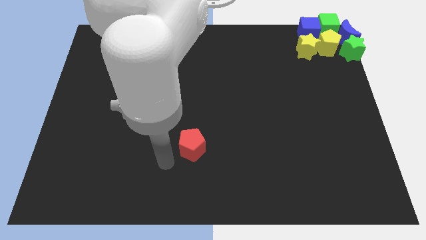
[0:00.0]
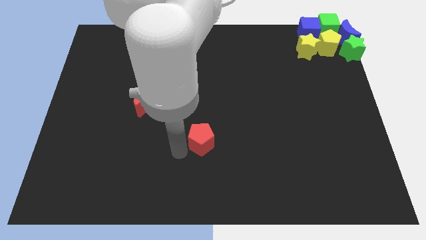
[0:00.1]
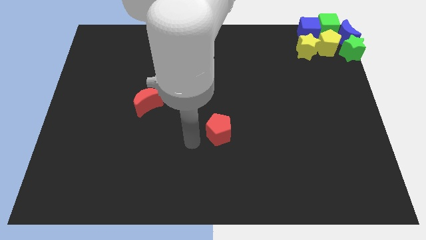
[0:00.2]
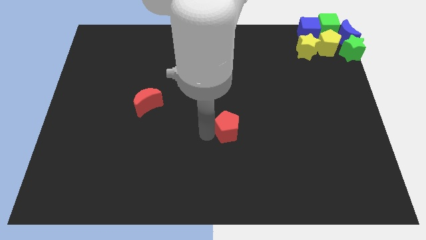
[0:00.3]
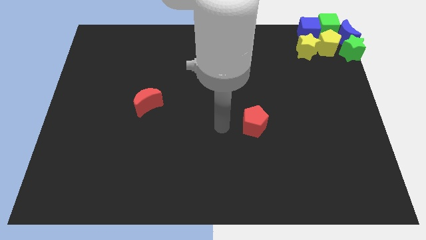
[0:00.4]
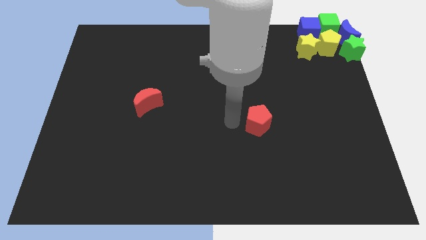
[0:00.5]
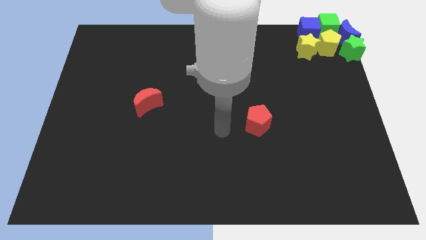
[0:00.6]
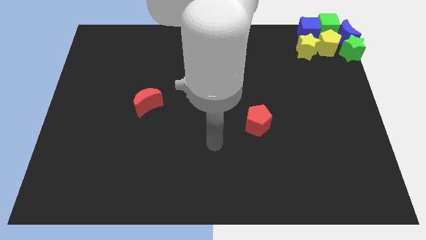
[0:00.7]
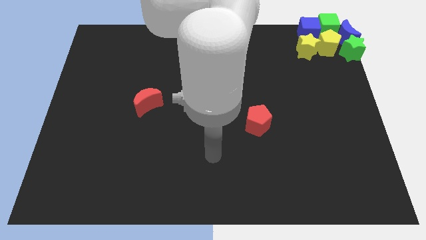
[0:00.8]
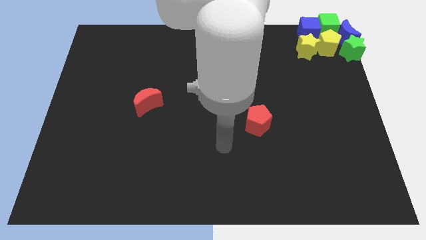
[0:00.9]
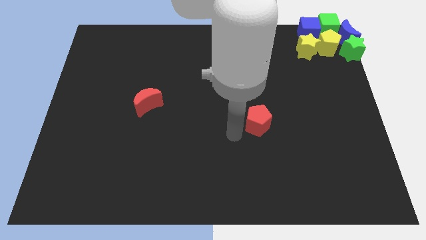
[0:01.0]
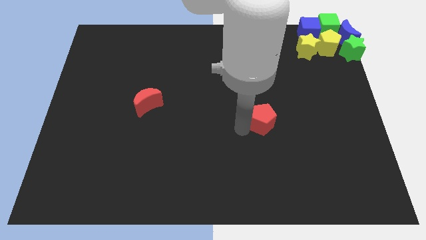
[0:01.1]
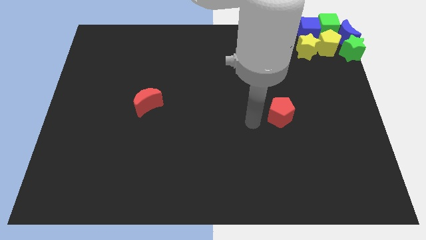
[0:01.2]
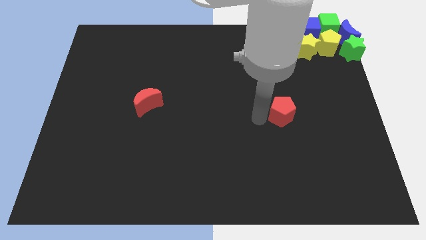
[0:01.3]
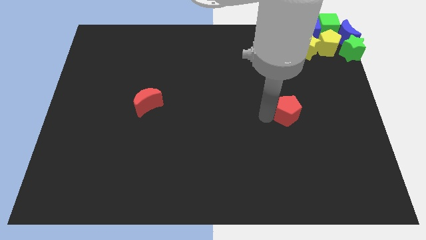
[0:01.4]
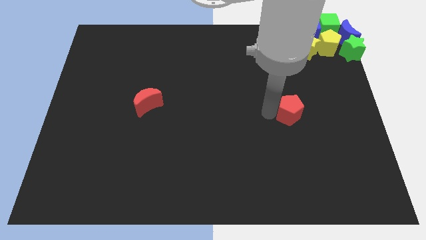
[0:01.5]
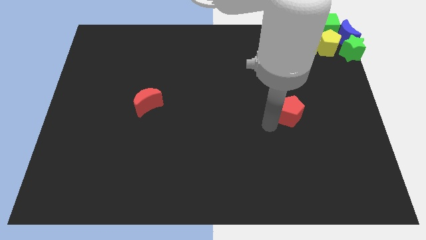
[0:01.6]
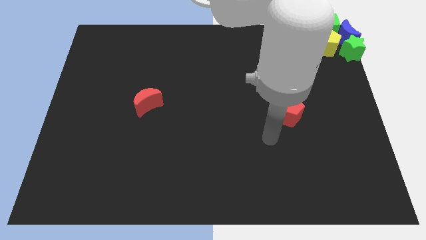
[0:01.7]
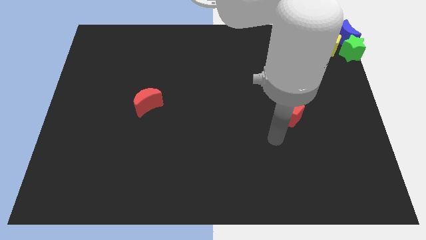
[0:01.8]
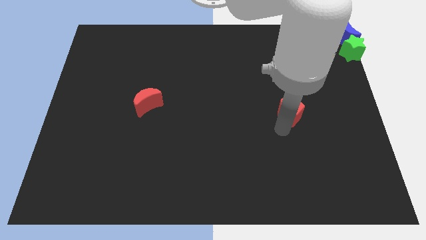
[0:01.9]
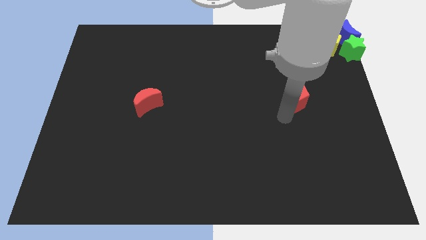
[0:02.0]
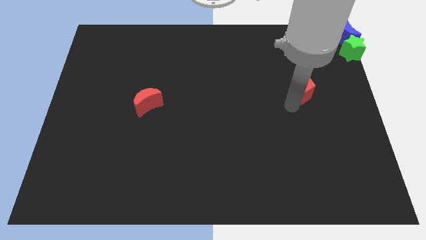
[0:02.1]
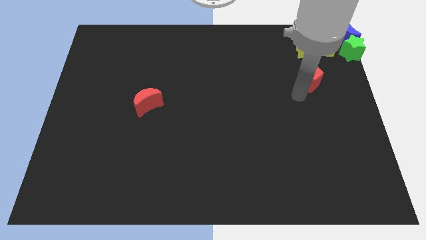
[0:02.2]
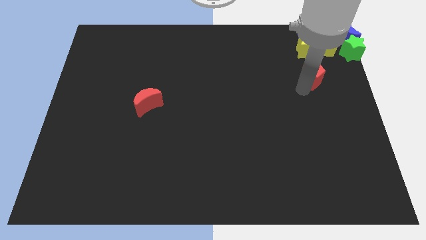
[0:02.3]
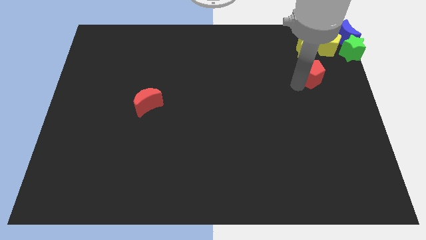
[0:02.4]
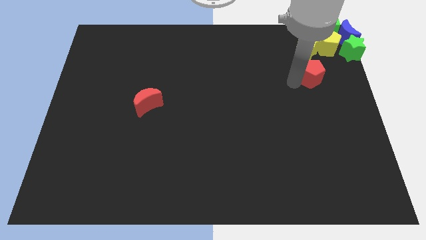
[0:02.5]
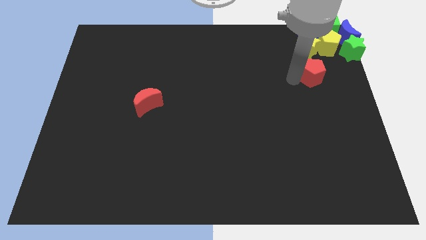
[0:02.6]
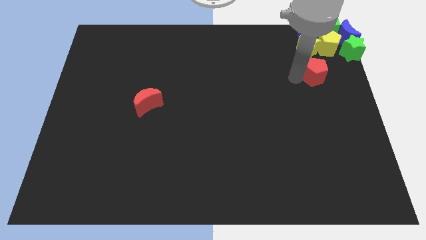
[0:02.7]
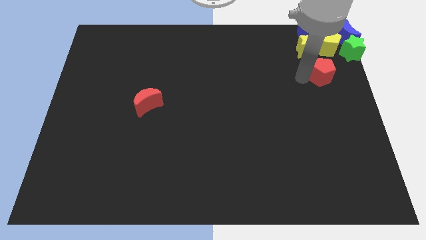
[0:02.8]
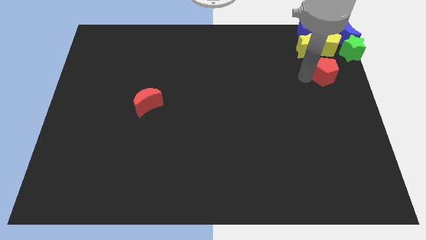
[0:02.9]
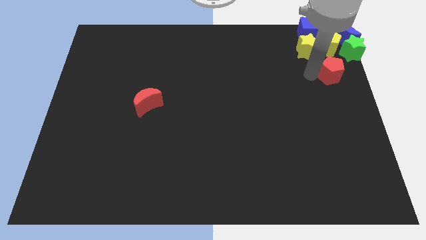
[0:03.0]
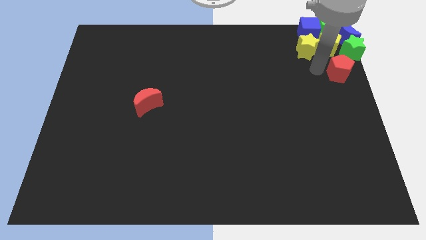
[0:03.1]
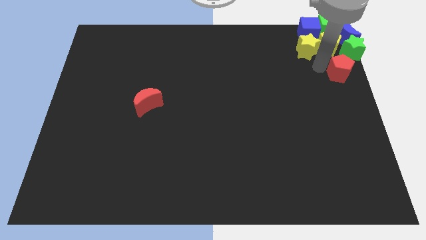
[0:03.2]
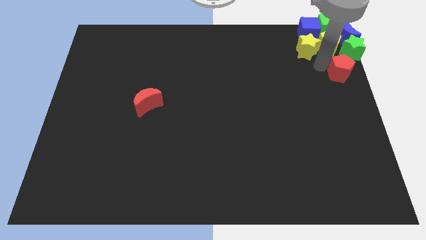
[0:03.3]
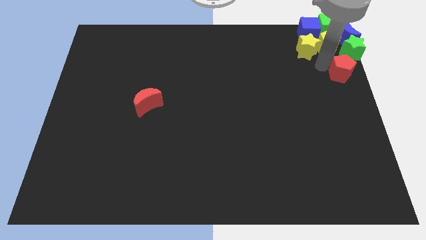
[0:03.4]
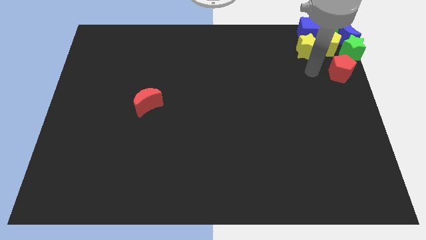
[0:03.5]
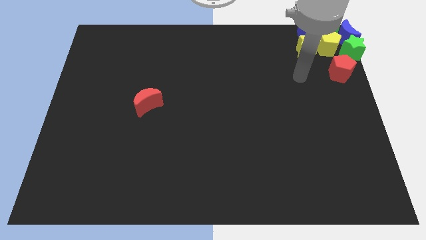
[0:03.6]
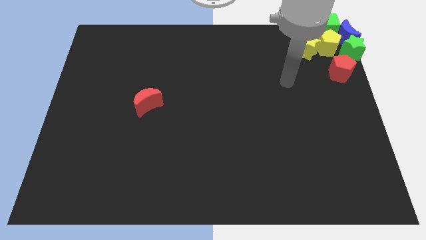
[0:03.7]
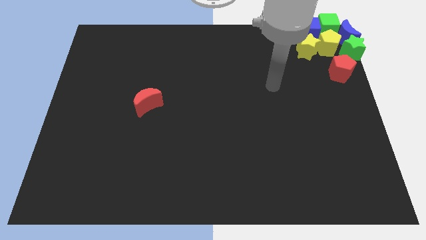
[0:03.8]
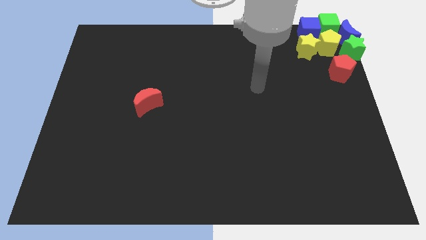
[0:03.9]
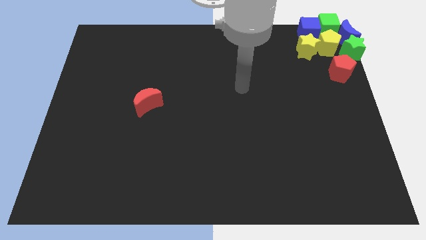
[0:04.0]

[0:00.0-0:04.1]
put the red pentagon diagonally on the bottom left side of the green star

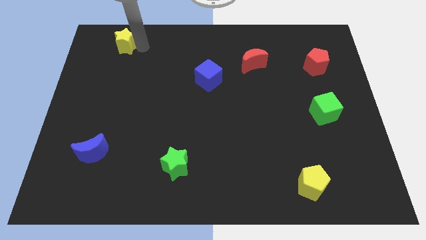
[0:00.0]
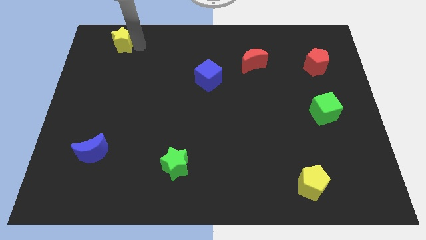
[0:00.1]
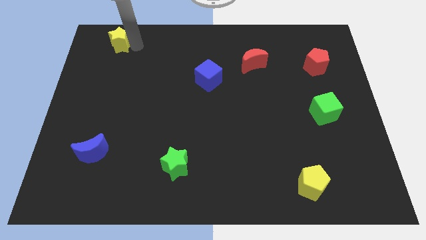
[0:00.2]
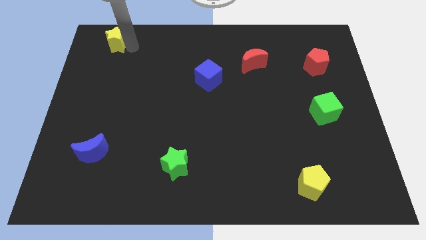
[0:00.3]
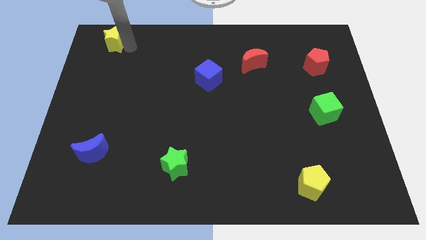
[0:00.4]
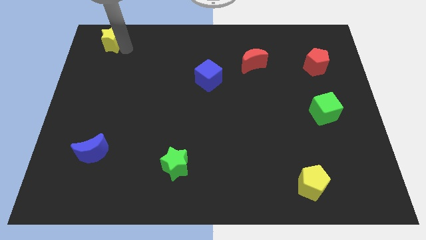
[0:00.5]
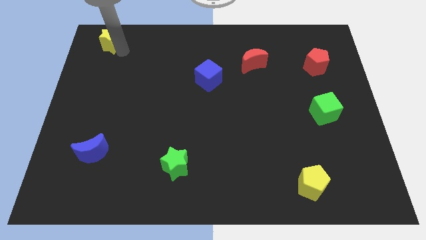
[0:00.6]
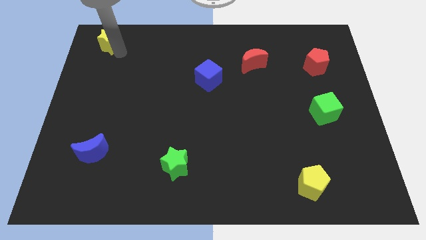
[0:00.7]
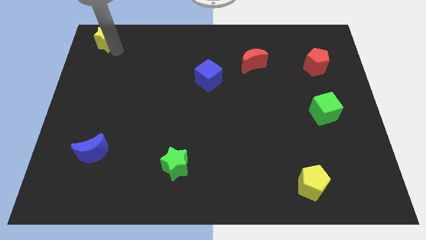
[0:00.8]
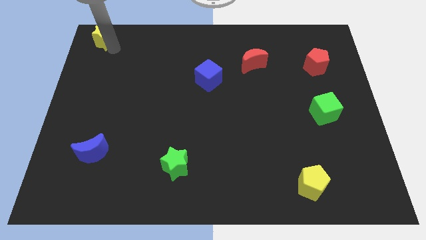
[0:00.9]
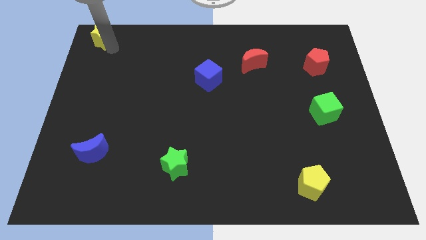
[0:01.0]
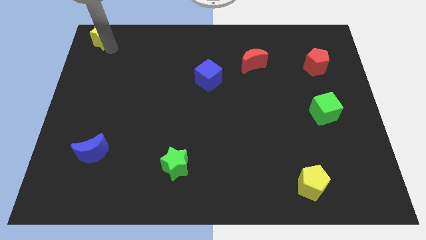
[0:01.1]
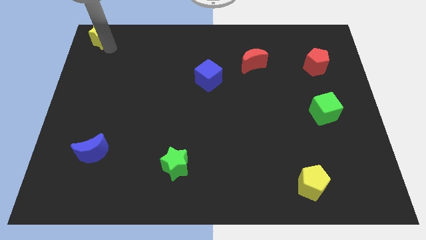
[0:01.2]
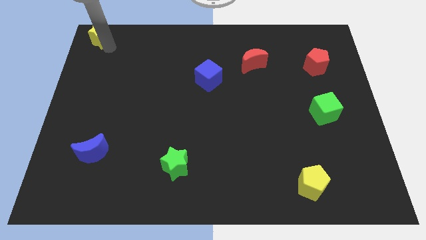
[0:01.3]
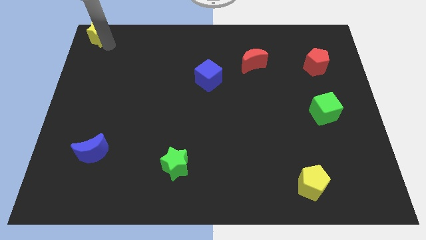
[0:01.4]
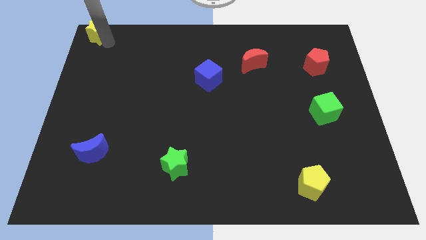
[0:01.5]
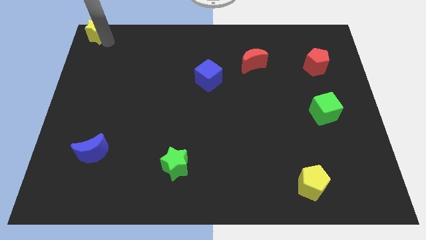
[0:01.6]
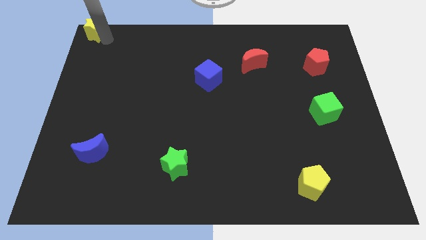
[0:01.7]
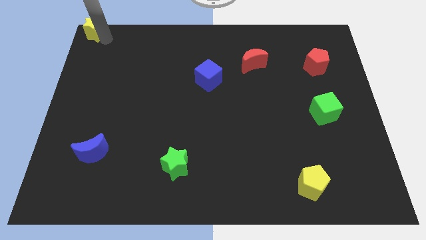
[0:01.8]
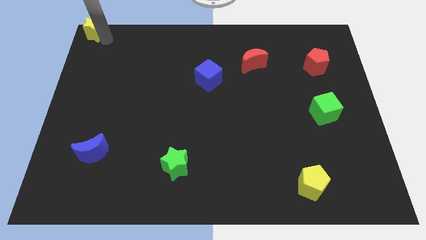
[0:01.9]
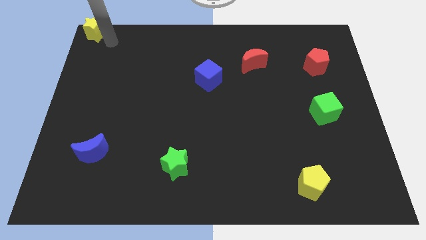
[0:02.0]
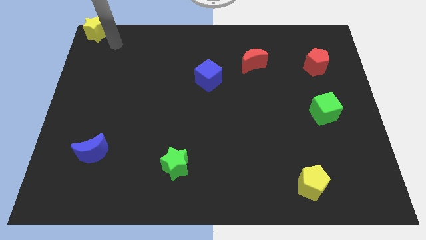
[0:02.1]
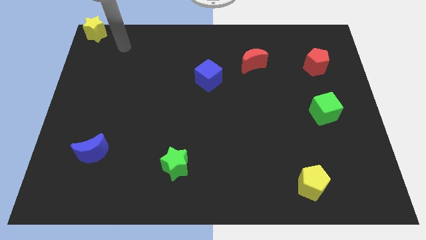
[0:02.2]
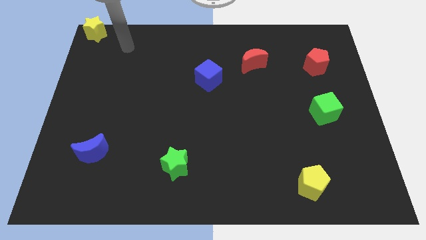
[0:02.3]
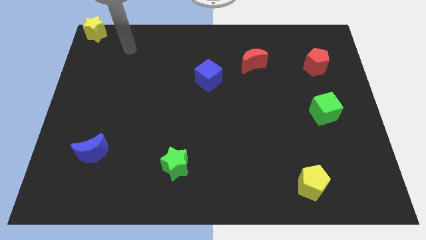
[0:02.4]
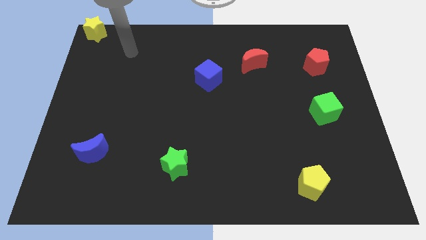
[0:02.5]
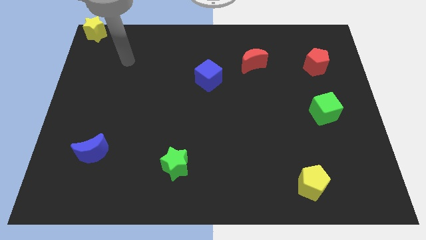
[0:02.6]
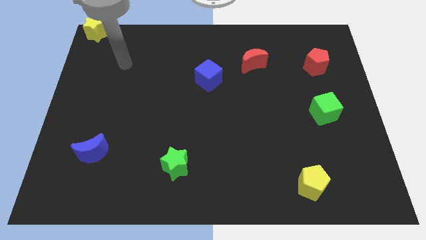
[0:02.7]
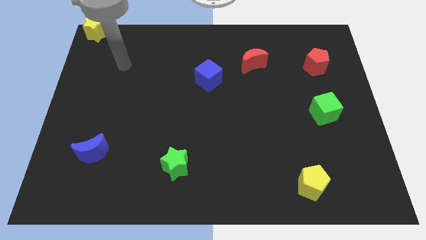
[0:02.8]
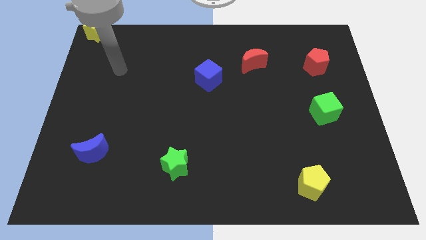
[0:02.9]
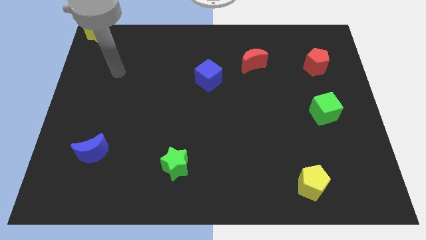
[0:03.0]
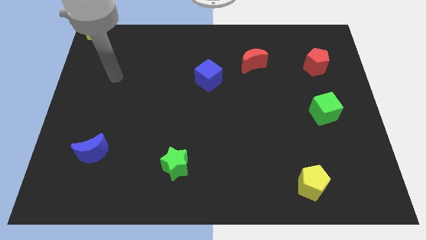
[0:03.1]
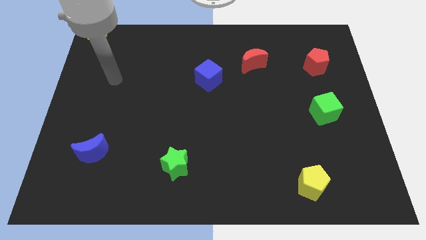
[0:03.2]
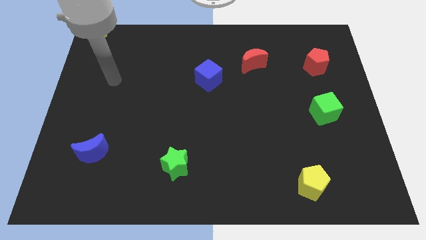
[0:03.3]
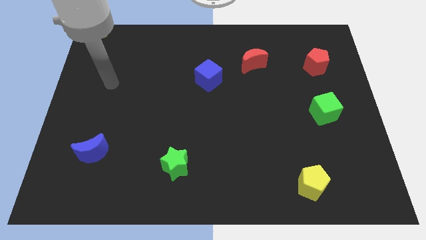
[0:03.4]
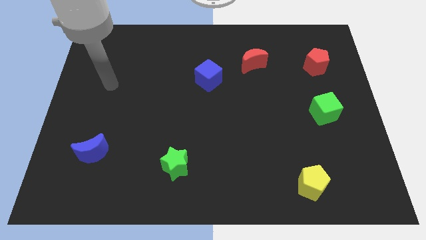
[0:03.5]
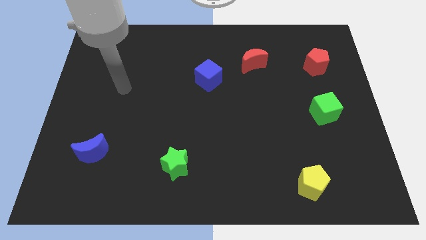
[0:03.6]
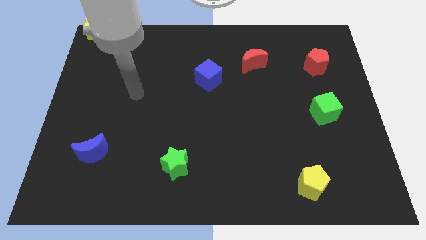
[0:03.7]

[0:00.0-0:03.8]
place the yellow star to the top left corner of the board

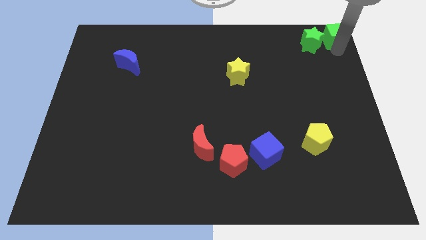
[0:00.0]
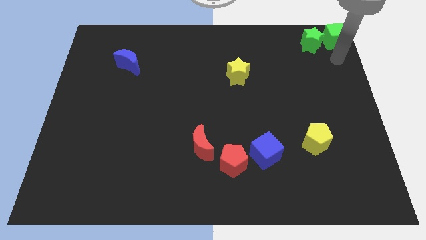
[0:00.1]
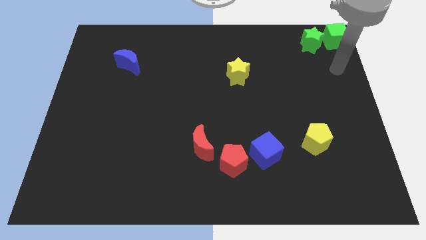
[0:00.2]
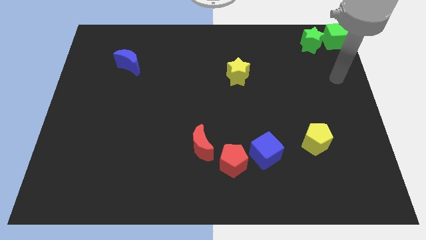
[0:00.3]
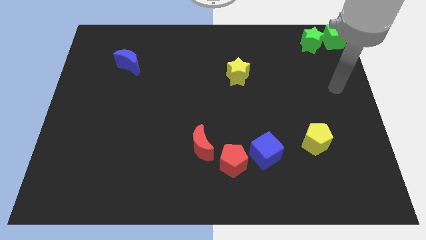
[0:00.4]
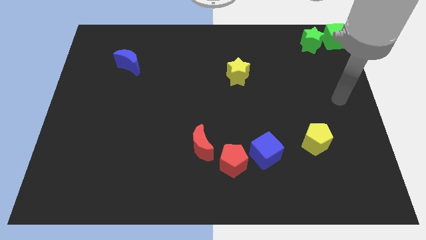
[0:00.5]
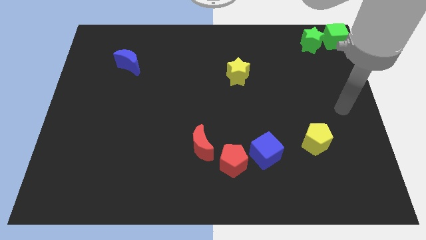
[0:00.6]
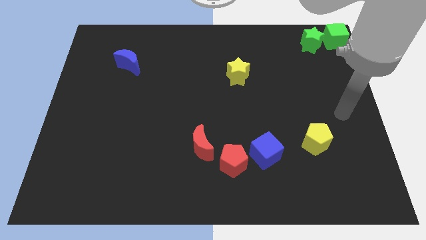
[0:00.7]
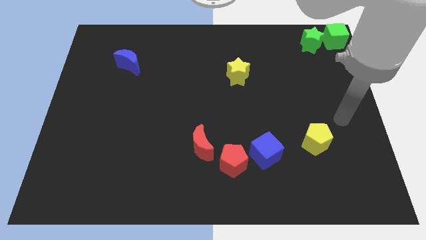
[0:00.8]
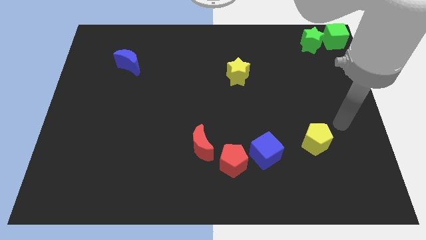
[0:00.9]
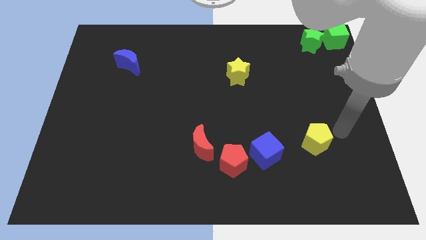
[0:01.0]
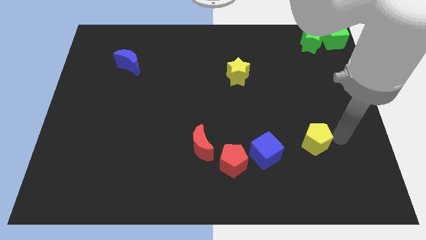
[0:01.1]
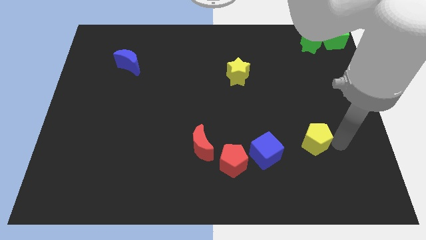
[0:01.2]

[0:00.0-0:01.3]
move your arm away from the green cube
